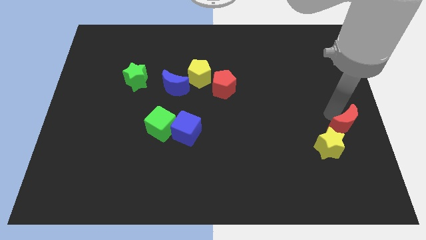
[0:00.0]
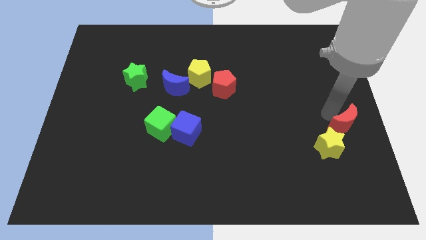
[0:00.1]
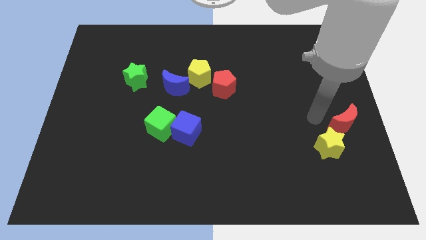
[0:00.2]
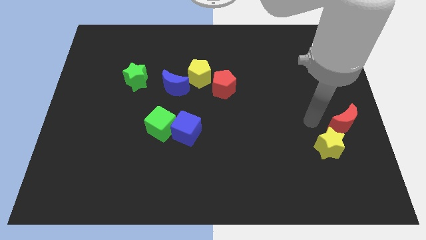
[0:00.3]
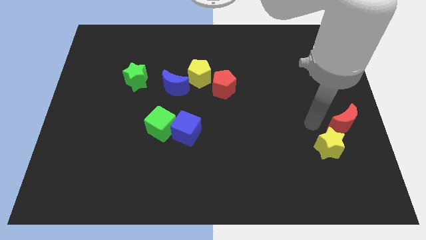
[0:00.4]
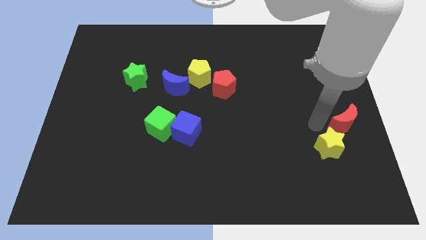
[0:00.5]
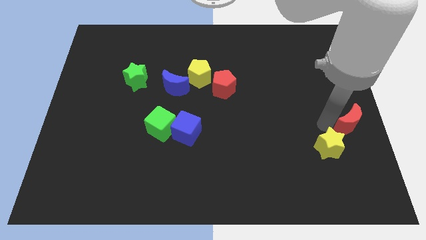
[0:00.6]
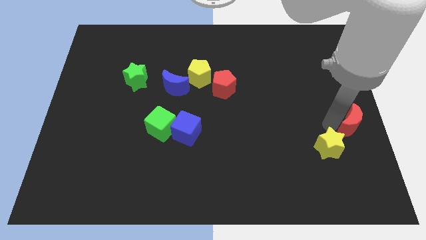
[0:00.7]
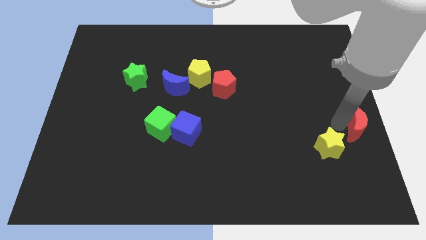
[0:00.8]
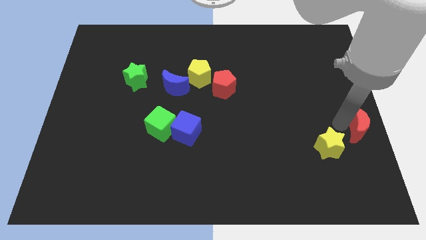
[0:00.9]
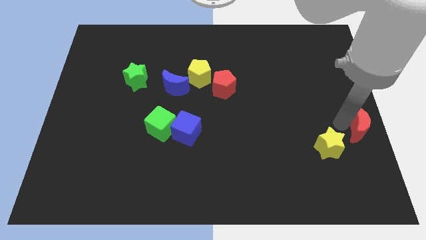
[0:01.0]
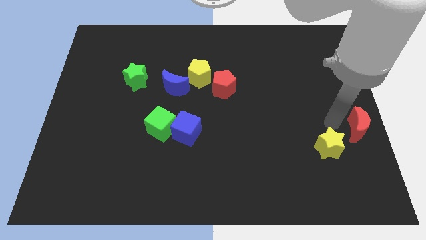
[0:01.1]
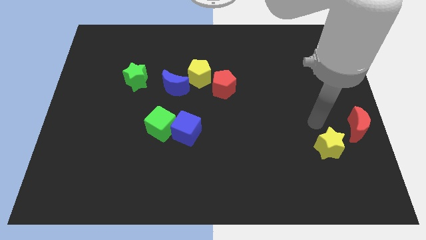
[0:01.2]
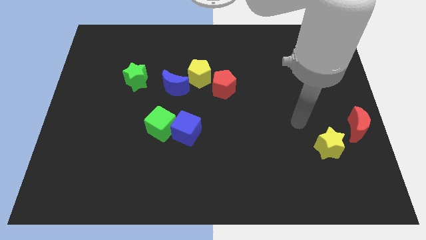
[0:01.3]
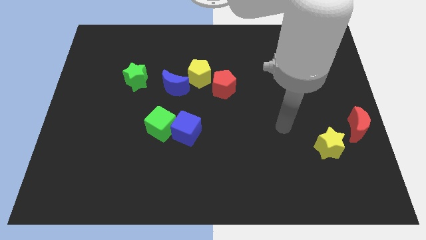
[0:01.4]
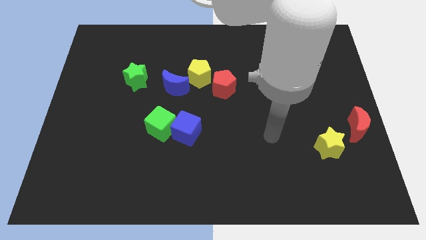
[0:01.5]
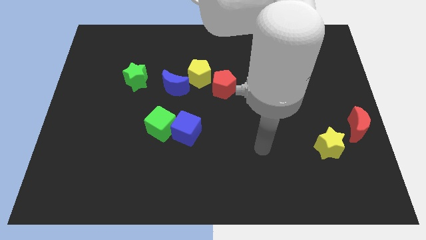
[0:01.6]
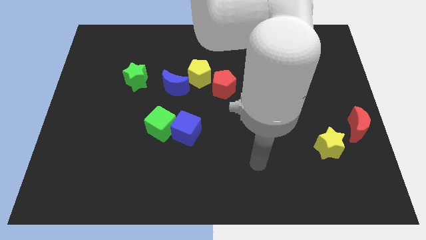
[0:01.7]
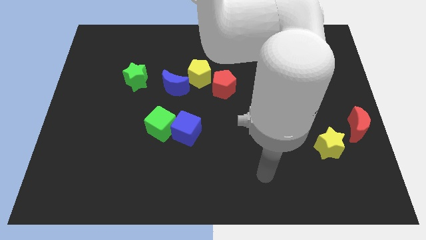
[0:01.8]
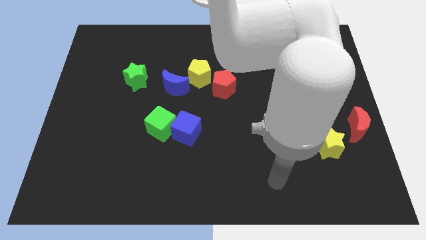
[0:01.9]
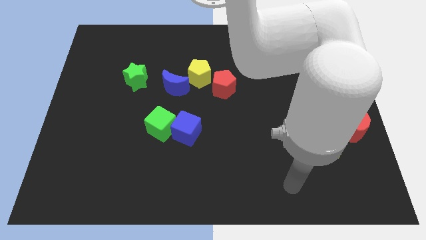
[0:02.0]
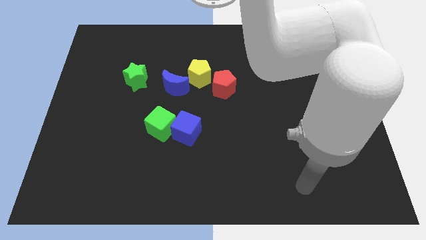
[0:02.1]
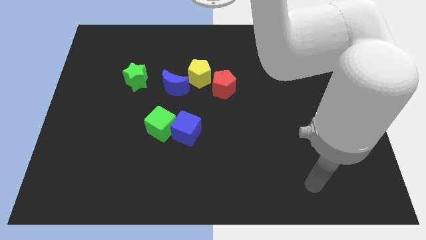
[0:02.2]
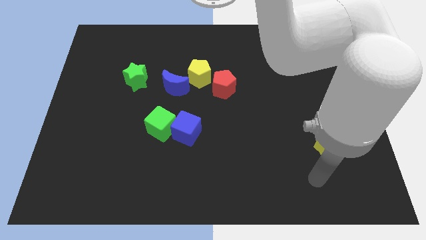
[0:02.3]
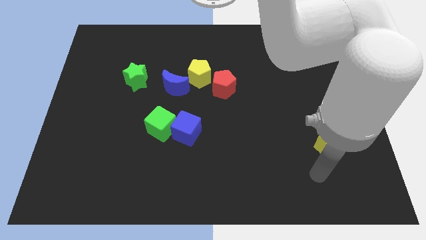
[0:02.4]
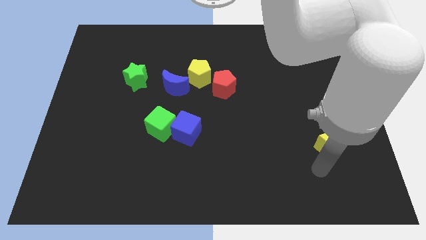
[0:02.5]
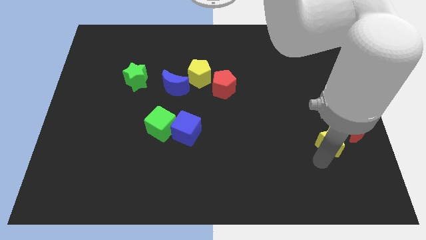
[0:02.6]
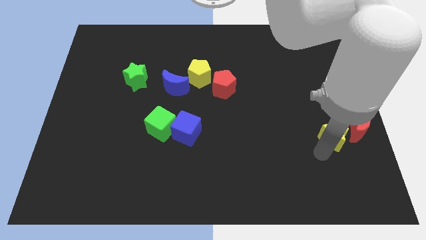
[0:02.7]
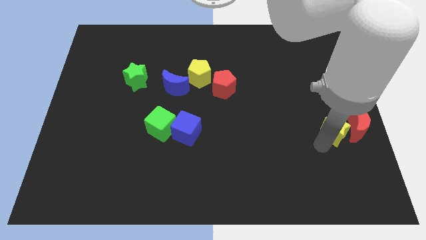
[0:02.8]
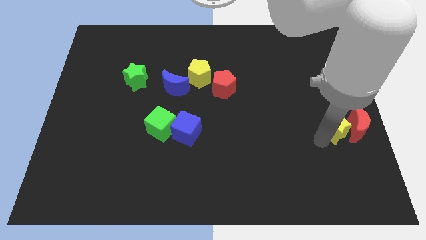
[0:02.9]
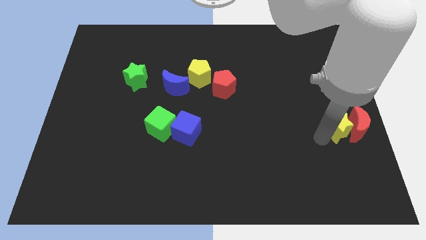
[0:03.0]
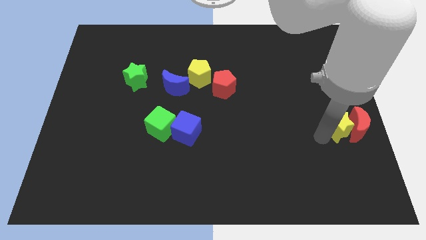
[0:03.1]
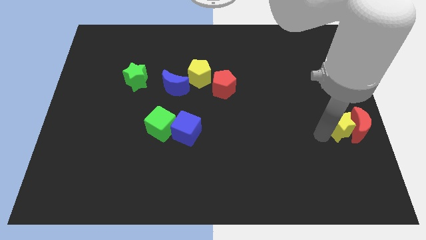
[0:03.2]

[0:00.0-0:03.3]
place a yellow star beside the red crescent

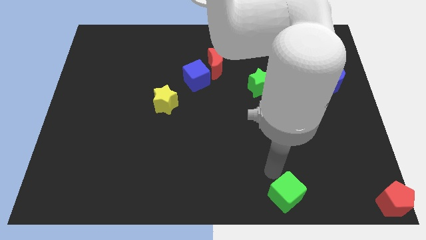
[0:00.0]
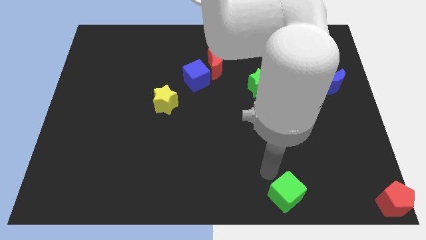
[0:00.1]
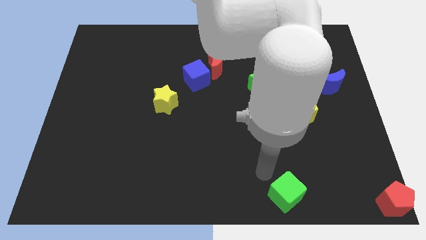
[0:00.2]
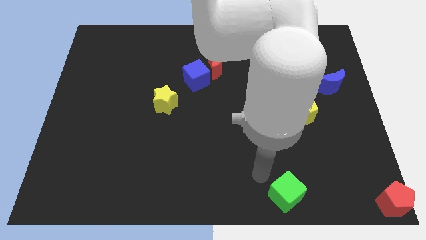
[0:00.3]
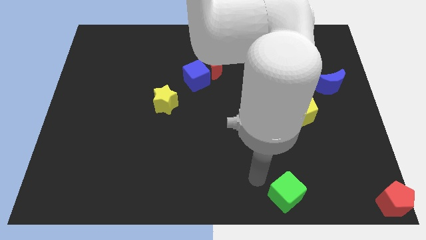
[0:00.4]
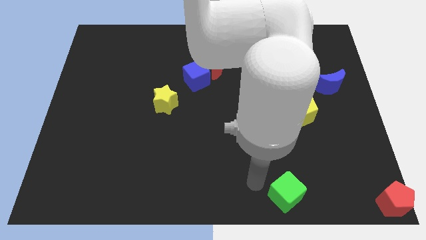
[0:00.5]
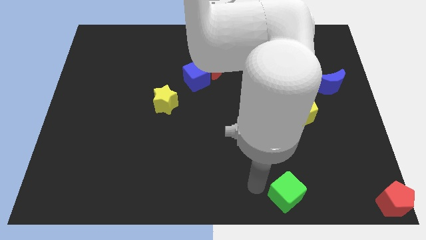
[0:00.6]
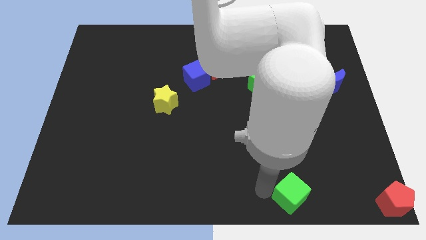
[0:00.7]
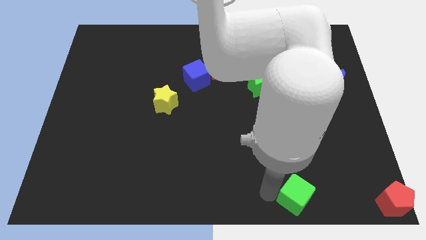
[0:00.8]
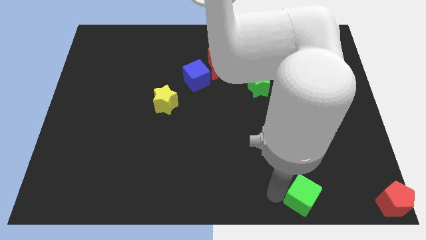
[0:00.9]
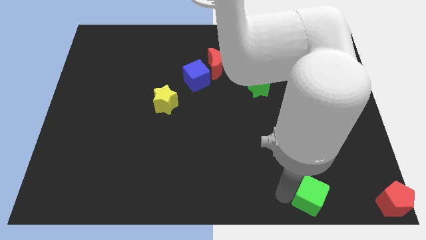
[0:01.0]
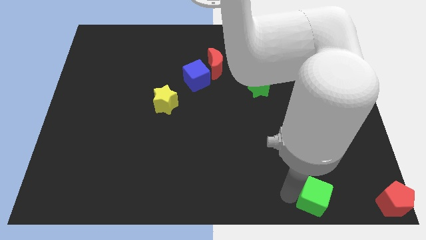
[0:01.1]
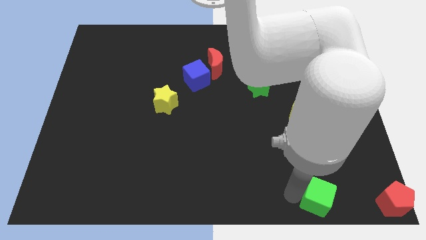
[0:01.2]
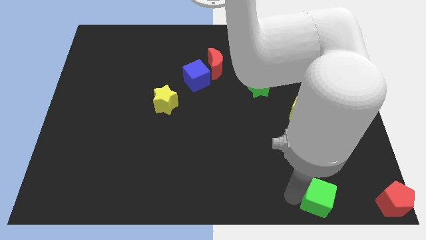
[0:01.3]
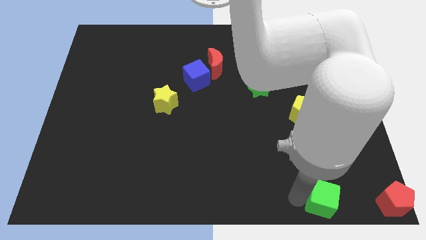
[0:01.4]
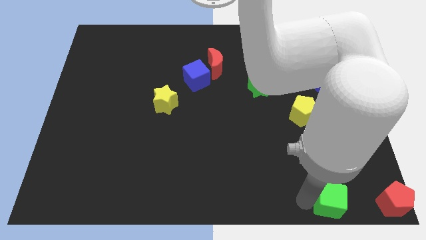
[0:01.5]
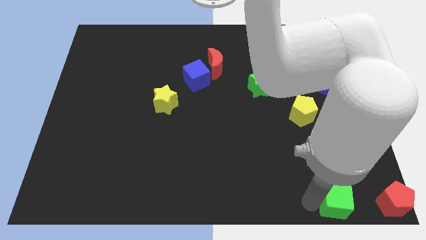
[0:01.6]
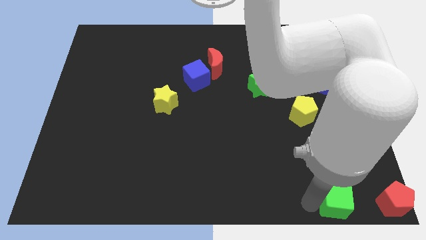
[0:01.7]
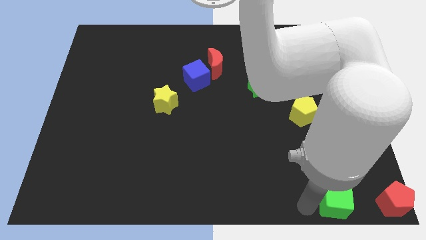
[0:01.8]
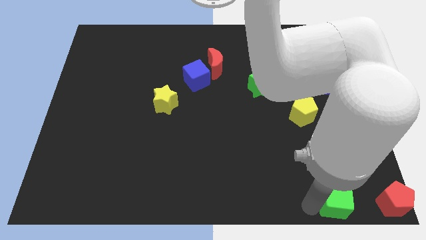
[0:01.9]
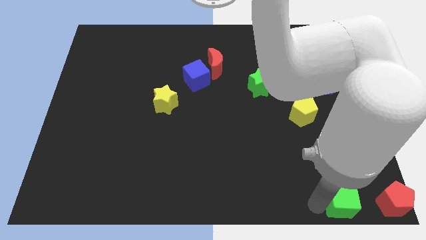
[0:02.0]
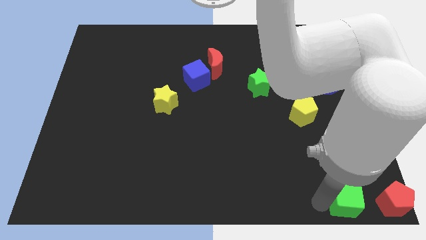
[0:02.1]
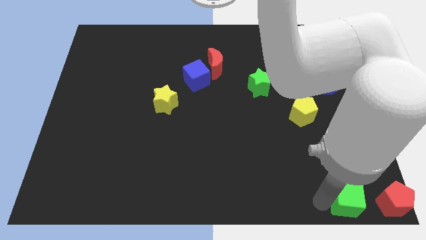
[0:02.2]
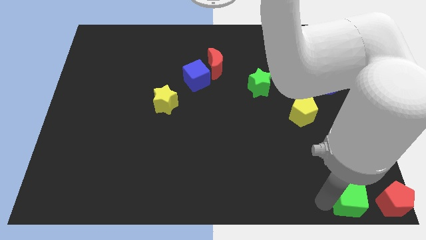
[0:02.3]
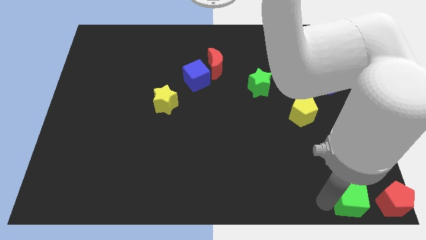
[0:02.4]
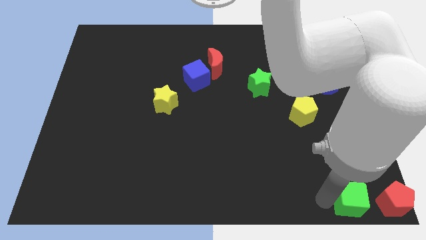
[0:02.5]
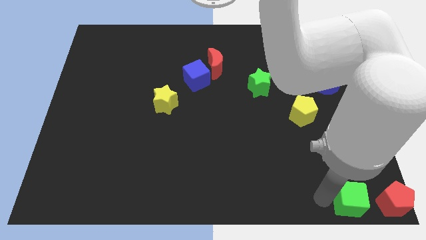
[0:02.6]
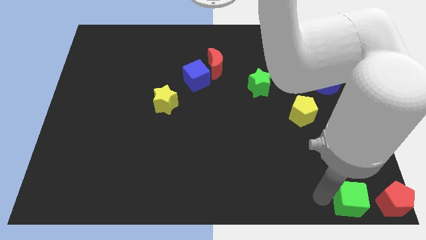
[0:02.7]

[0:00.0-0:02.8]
push the green cube to the left of the red pentagon

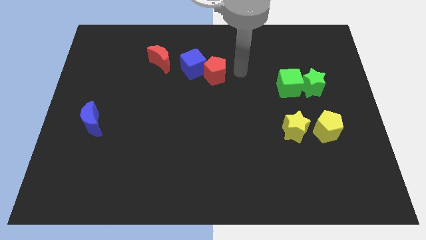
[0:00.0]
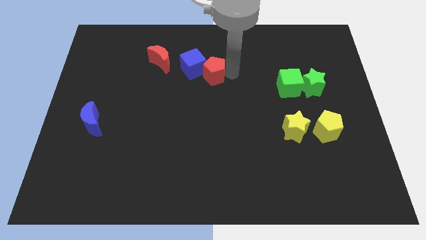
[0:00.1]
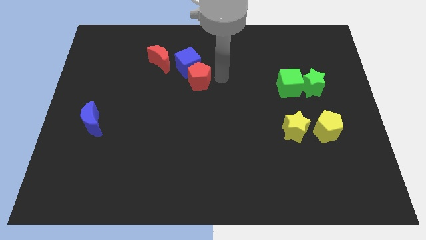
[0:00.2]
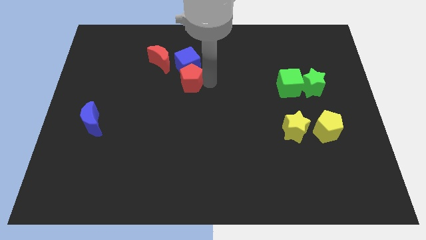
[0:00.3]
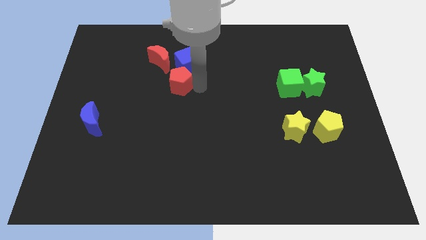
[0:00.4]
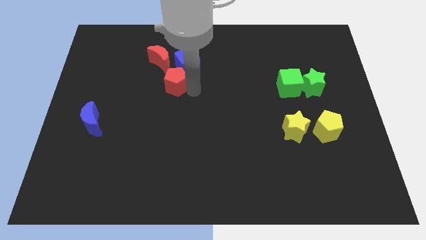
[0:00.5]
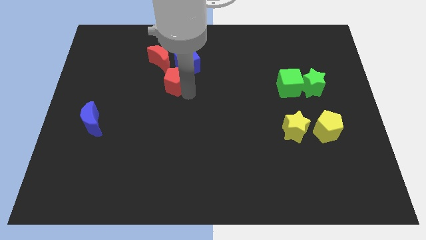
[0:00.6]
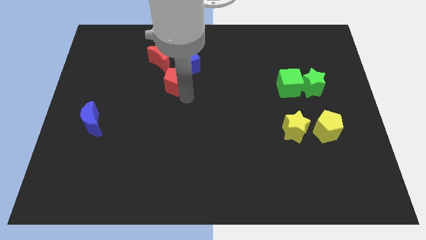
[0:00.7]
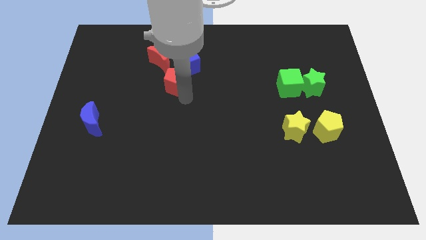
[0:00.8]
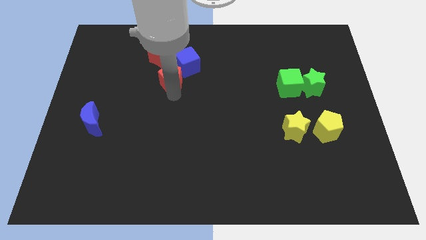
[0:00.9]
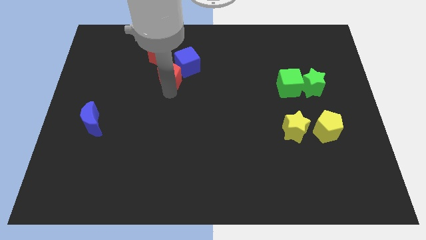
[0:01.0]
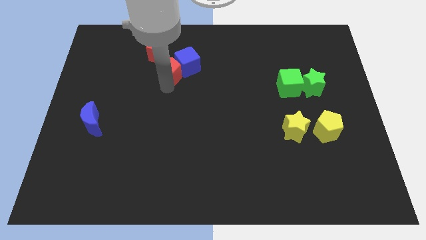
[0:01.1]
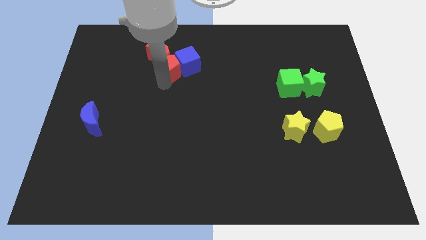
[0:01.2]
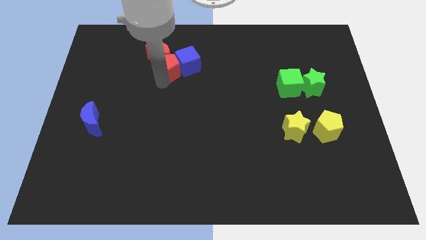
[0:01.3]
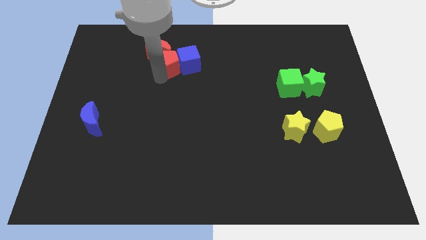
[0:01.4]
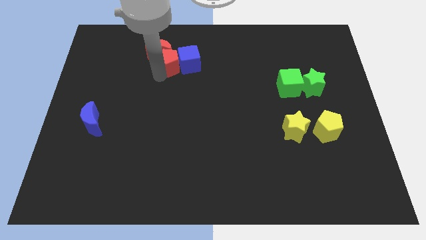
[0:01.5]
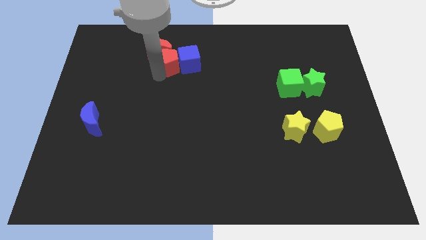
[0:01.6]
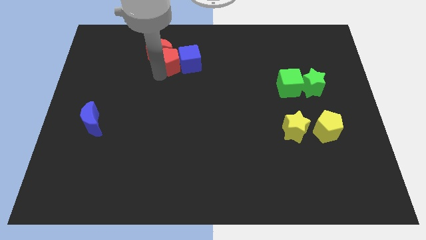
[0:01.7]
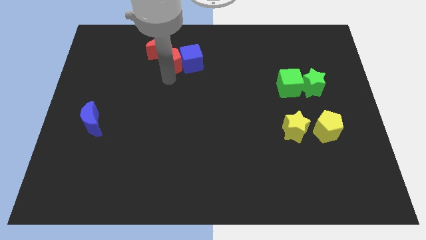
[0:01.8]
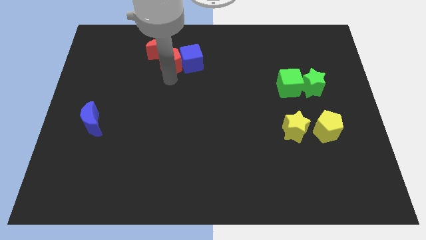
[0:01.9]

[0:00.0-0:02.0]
move the red pentagon to the left side of the blue cube

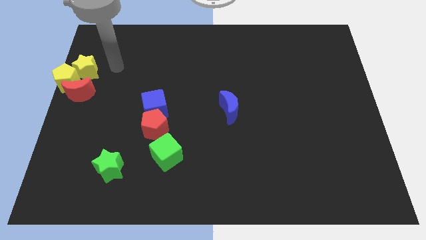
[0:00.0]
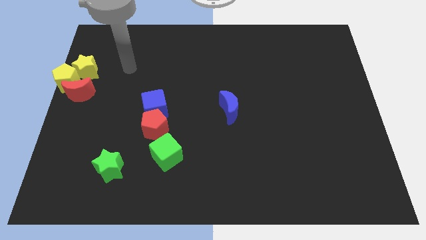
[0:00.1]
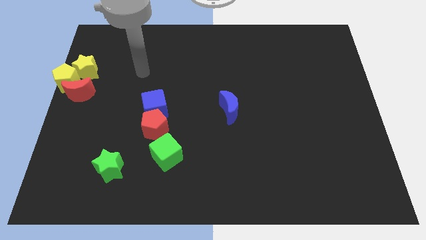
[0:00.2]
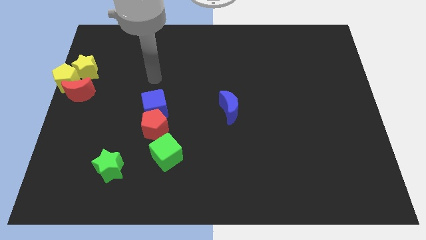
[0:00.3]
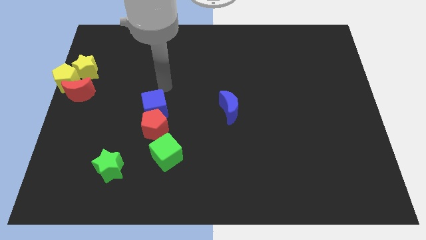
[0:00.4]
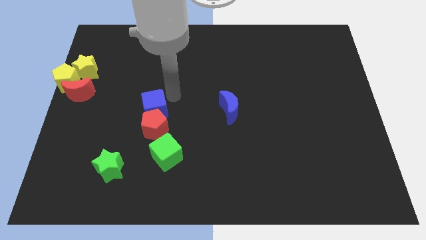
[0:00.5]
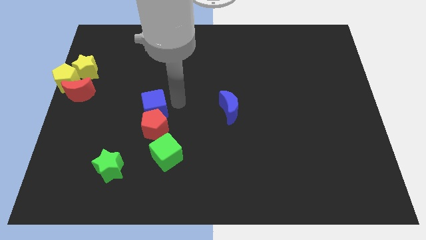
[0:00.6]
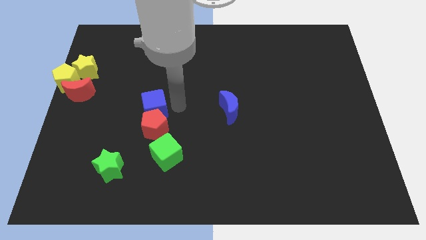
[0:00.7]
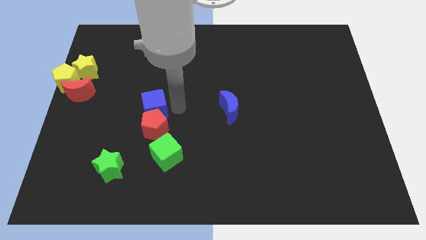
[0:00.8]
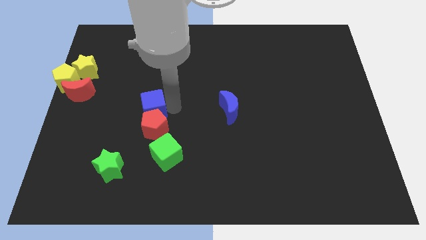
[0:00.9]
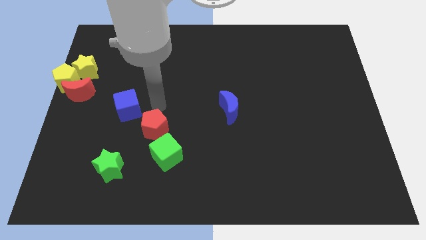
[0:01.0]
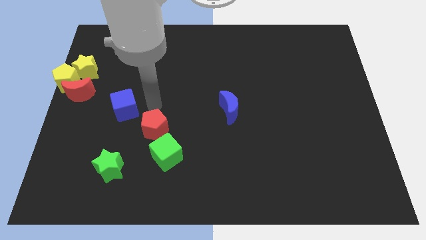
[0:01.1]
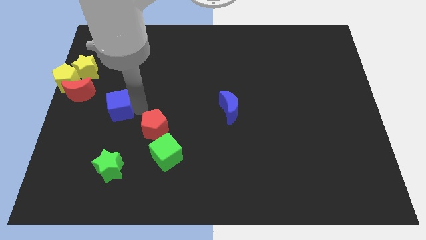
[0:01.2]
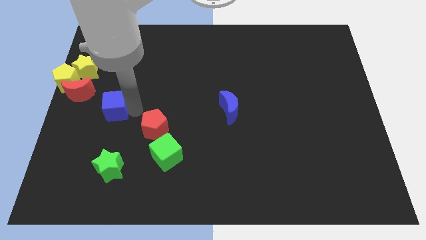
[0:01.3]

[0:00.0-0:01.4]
push the blue cube slightly to the left of the board
